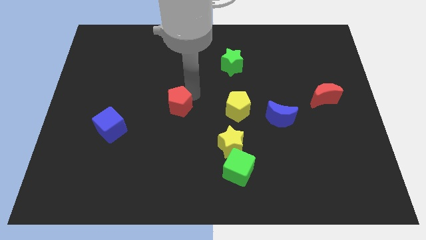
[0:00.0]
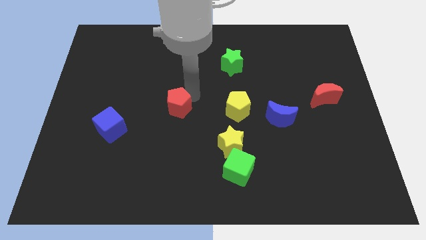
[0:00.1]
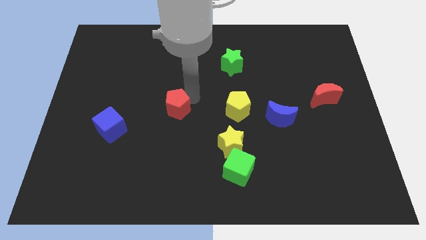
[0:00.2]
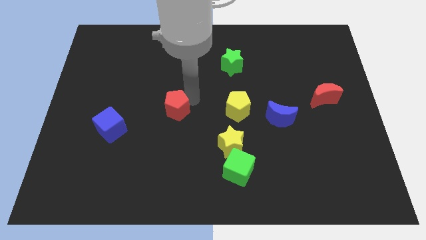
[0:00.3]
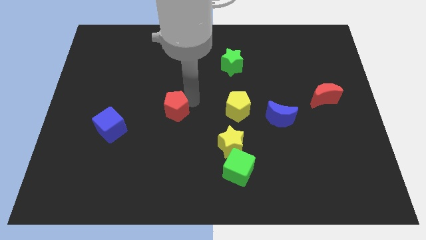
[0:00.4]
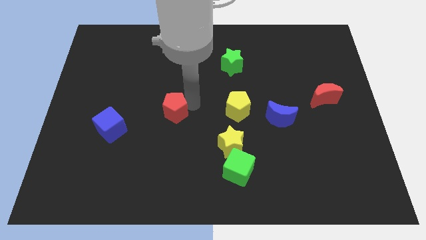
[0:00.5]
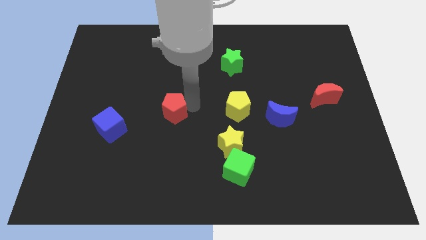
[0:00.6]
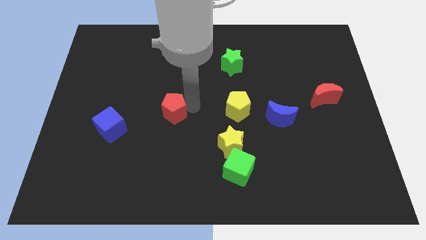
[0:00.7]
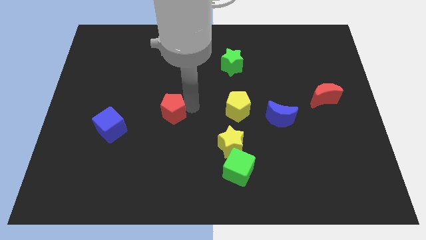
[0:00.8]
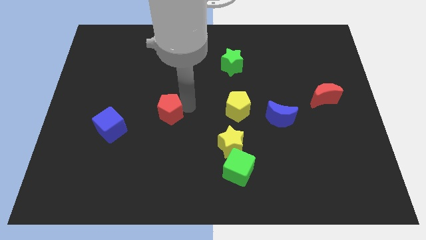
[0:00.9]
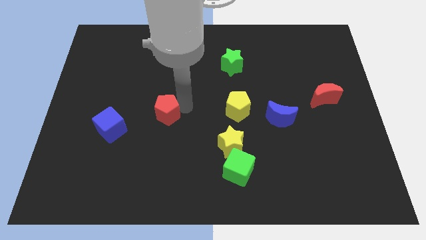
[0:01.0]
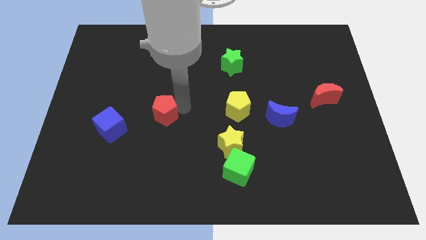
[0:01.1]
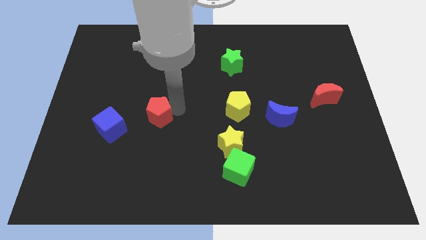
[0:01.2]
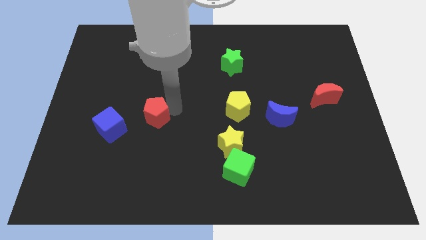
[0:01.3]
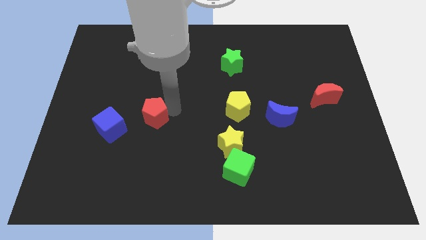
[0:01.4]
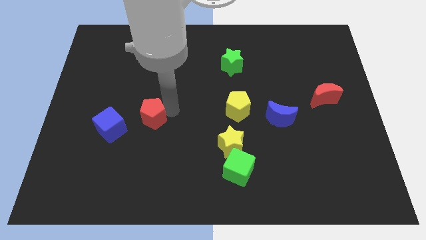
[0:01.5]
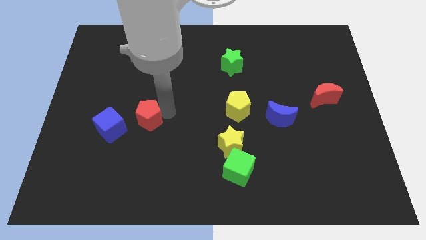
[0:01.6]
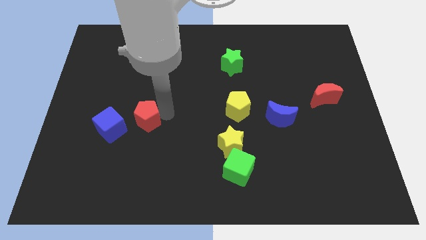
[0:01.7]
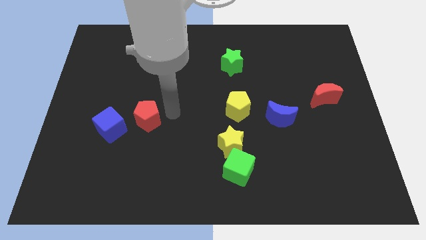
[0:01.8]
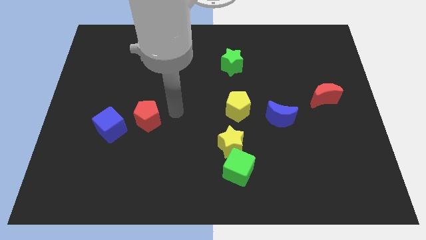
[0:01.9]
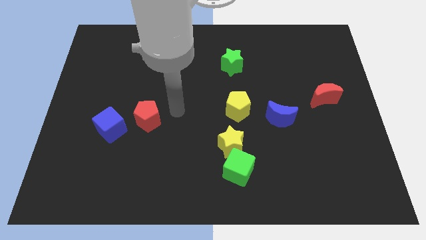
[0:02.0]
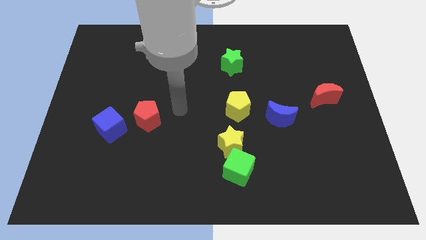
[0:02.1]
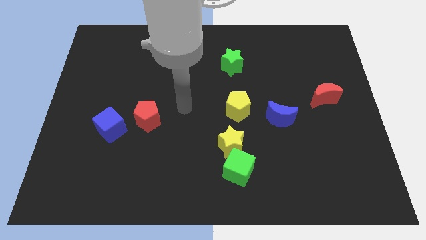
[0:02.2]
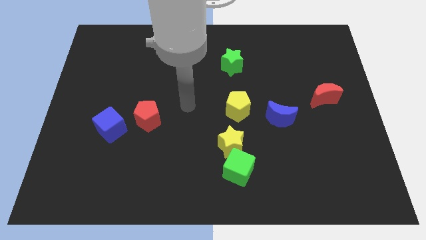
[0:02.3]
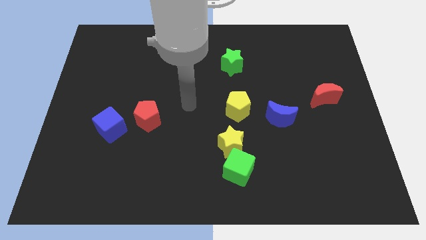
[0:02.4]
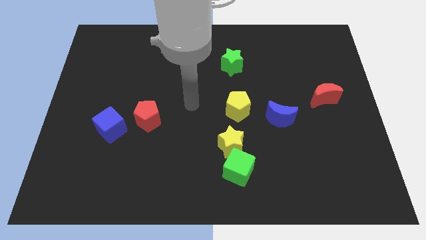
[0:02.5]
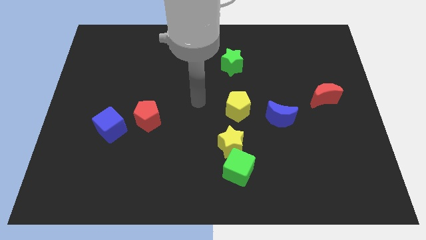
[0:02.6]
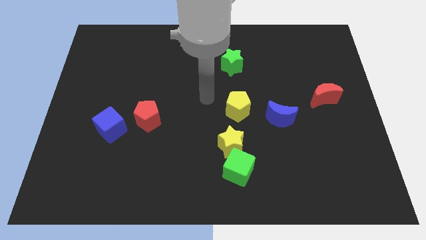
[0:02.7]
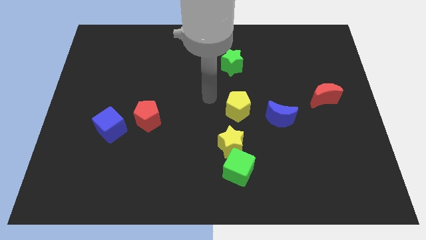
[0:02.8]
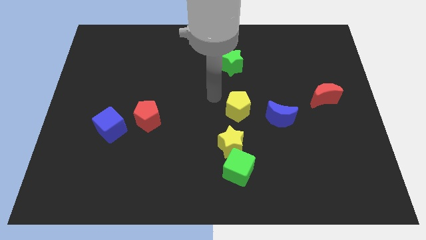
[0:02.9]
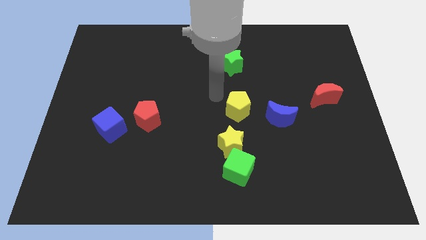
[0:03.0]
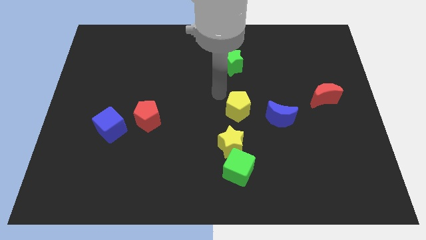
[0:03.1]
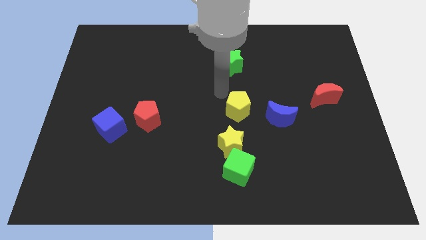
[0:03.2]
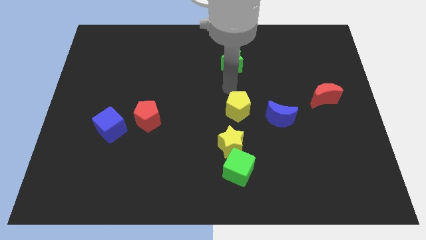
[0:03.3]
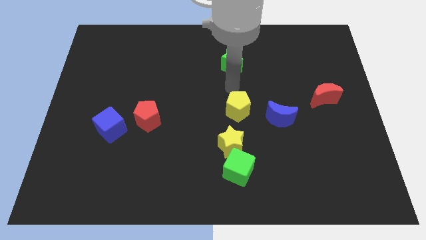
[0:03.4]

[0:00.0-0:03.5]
move the red pentagon to the top right side of the blue cube

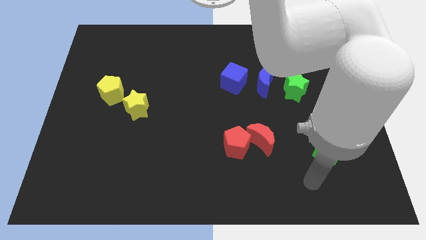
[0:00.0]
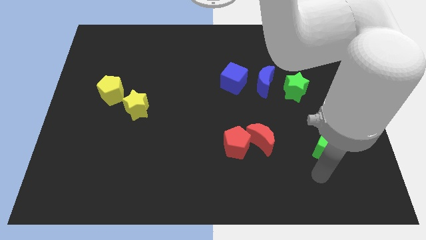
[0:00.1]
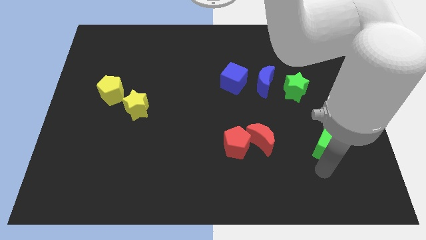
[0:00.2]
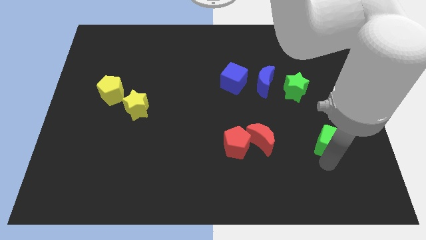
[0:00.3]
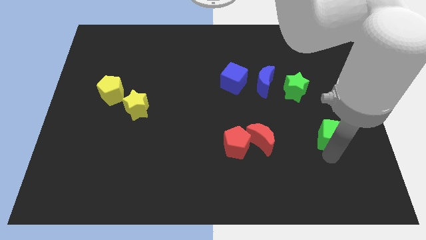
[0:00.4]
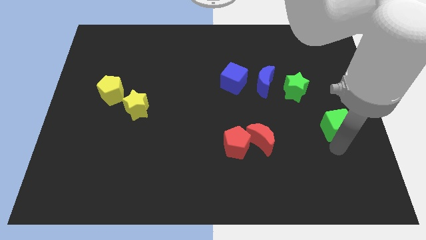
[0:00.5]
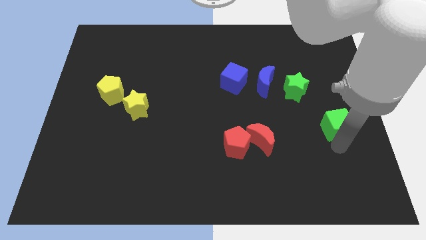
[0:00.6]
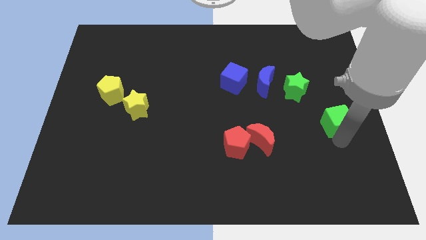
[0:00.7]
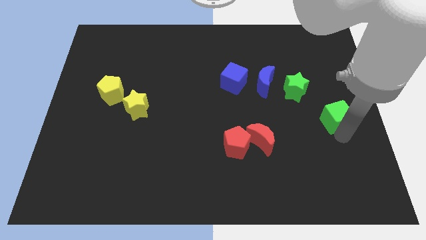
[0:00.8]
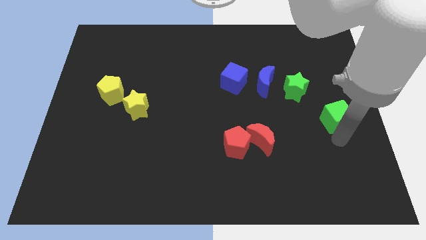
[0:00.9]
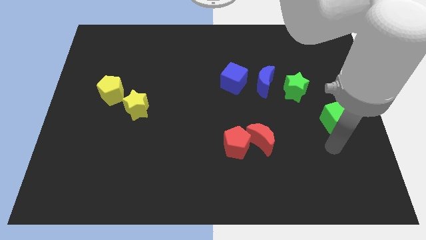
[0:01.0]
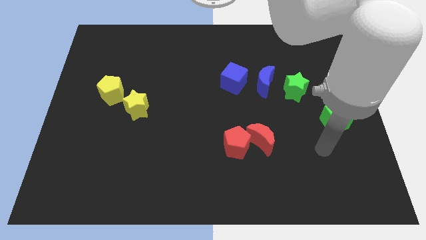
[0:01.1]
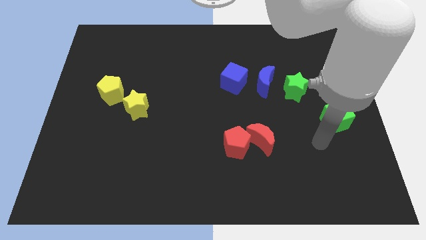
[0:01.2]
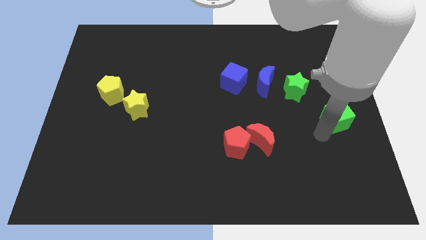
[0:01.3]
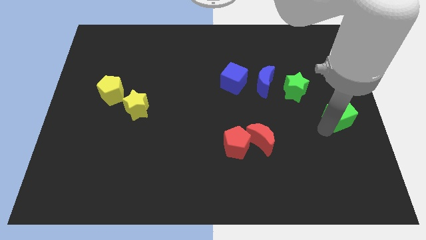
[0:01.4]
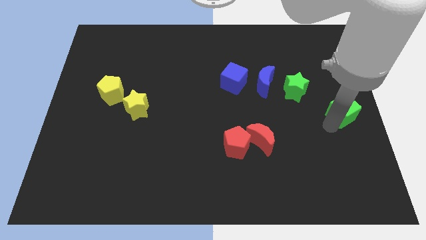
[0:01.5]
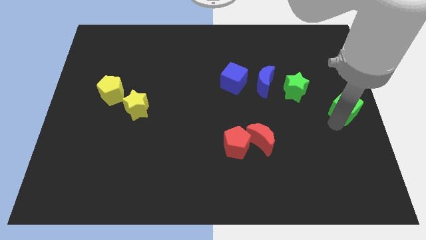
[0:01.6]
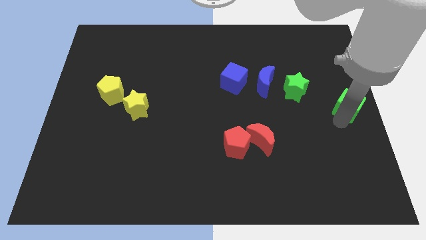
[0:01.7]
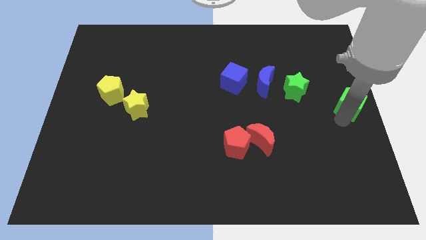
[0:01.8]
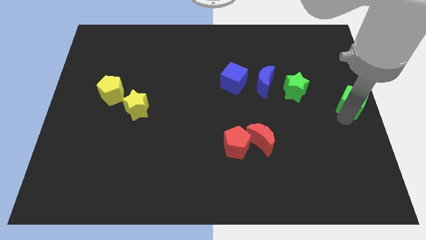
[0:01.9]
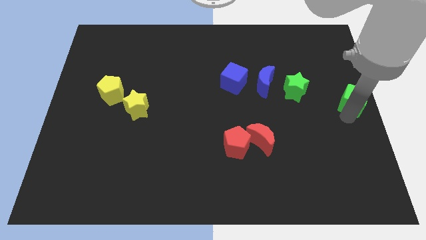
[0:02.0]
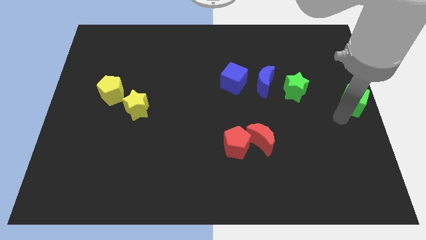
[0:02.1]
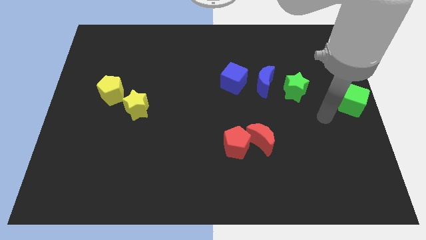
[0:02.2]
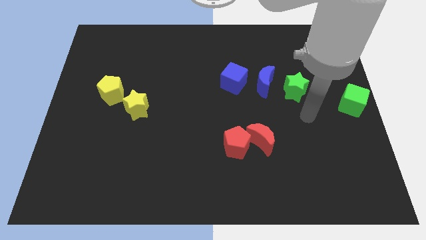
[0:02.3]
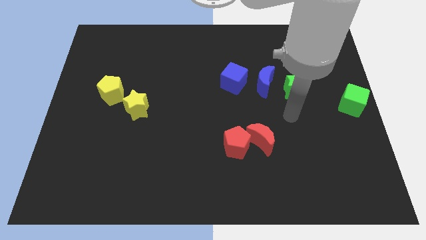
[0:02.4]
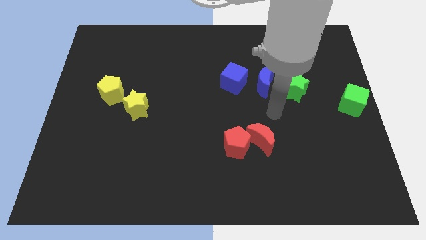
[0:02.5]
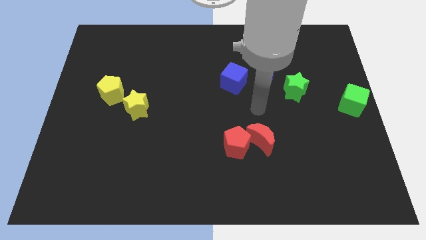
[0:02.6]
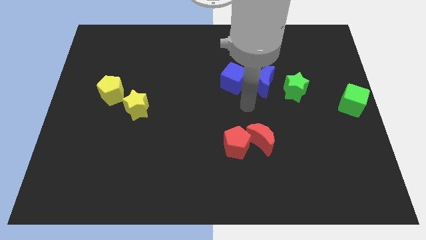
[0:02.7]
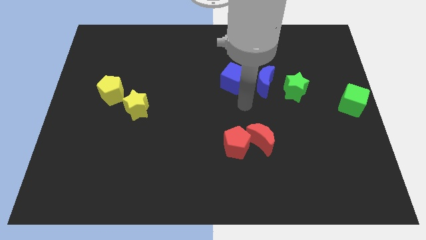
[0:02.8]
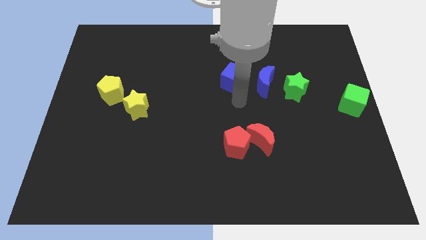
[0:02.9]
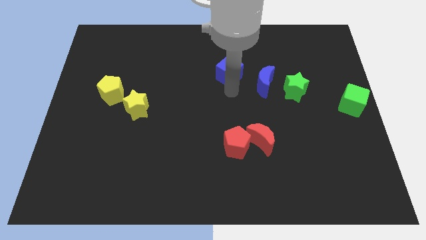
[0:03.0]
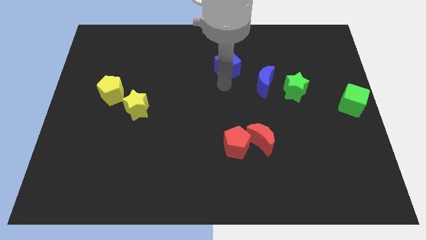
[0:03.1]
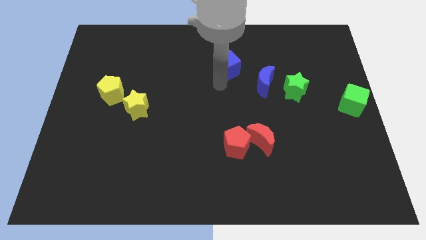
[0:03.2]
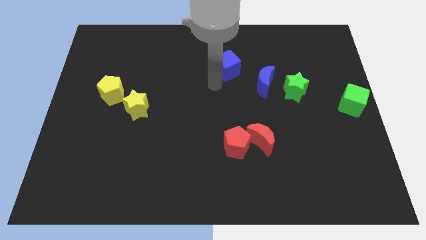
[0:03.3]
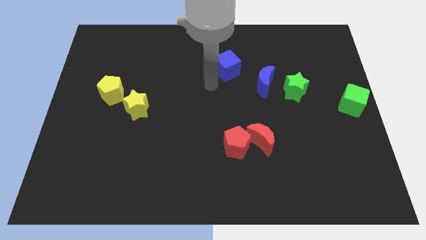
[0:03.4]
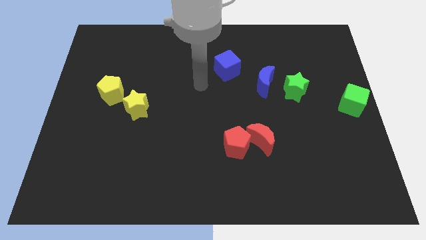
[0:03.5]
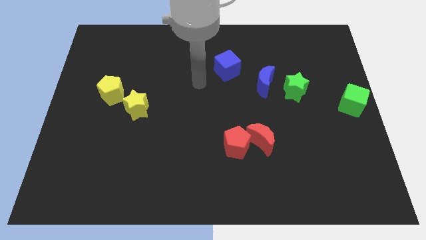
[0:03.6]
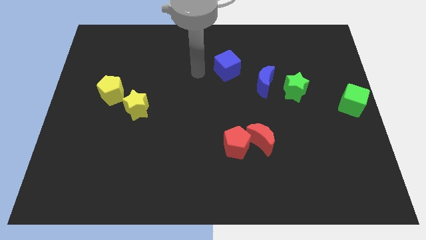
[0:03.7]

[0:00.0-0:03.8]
place the green cube to the right center of the board

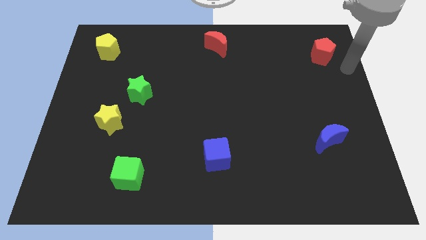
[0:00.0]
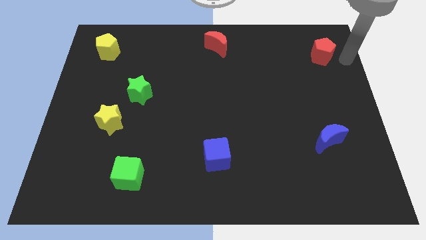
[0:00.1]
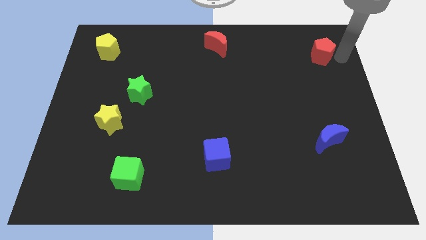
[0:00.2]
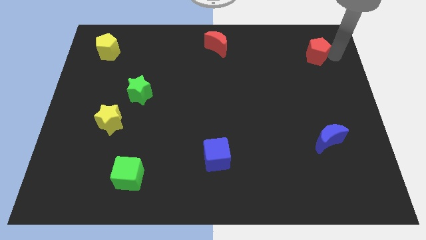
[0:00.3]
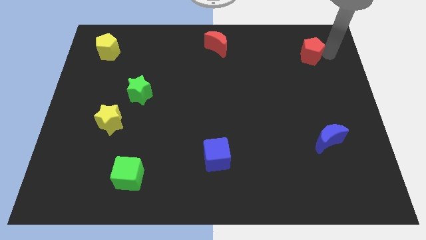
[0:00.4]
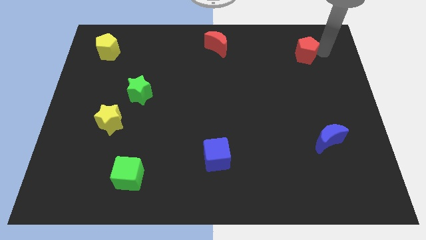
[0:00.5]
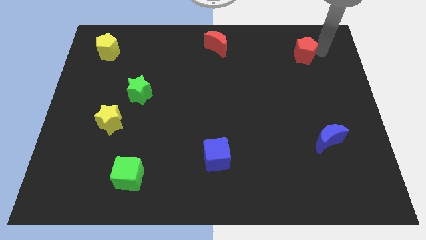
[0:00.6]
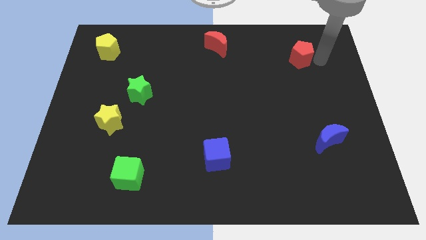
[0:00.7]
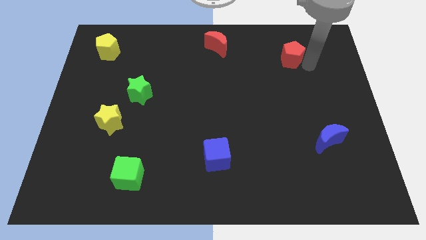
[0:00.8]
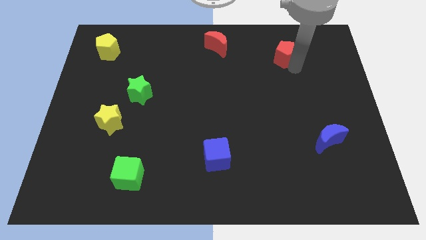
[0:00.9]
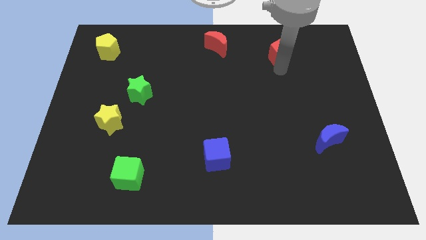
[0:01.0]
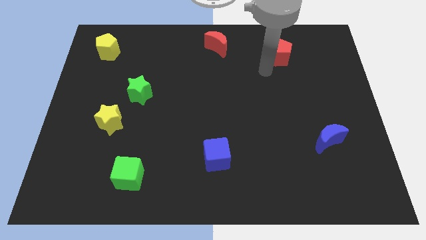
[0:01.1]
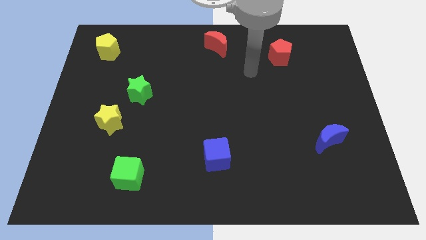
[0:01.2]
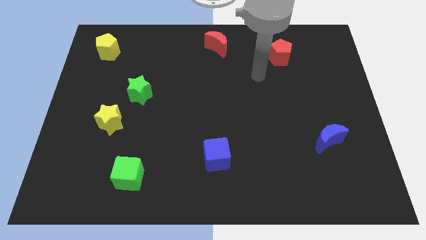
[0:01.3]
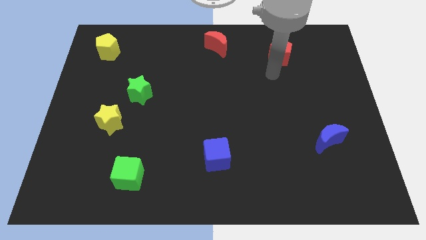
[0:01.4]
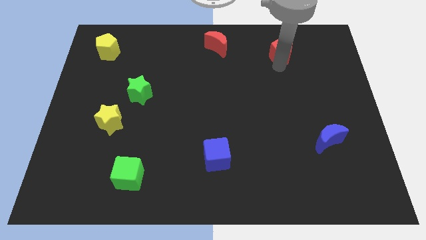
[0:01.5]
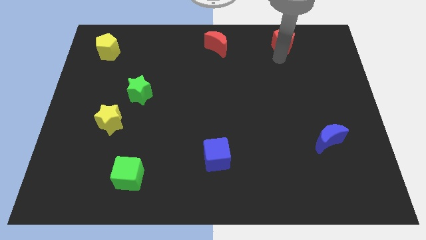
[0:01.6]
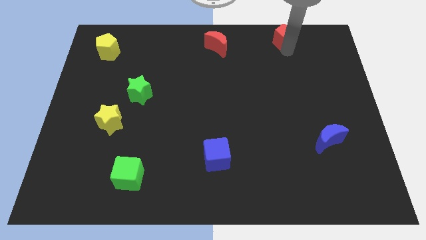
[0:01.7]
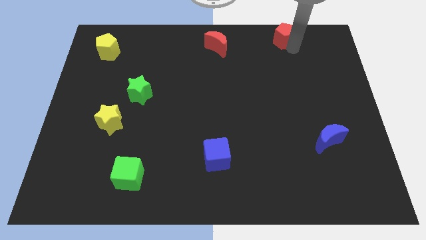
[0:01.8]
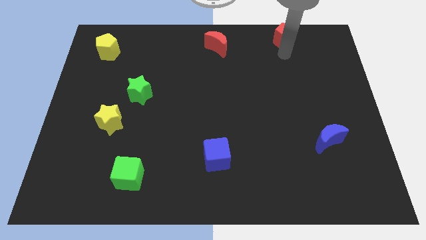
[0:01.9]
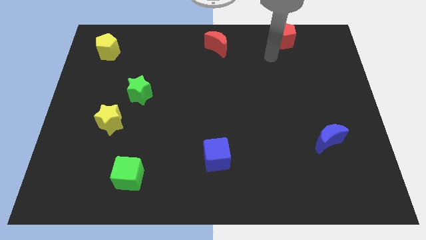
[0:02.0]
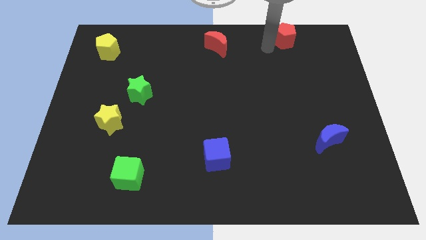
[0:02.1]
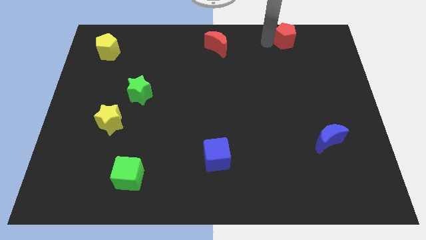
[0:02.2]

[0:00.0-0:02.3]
move the red pentagon to the top left side of the board
